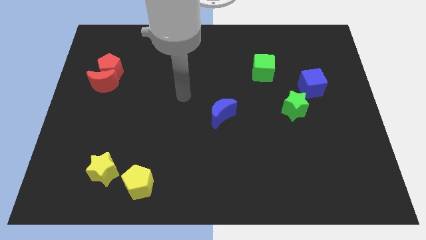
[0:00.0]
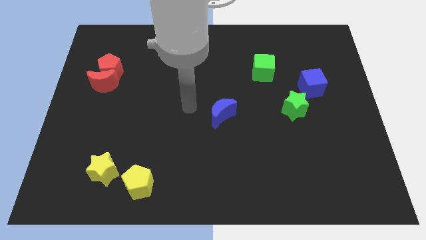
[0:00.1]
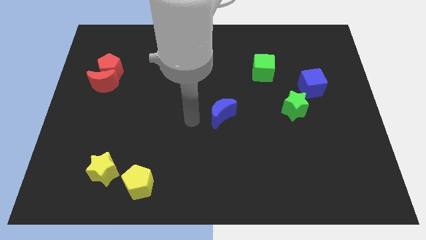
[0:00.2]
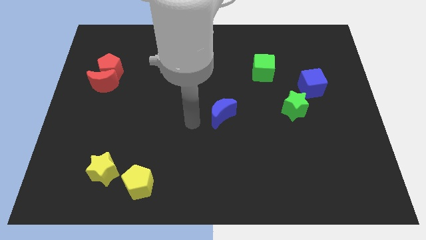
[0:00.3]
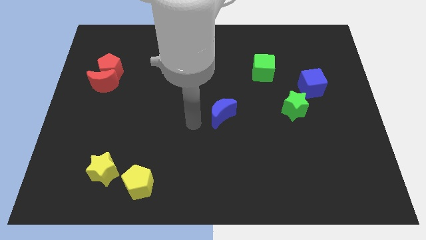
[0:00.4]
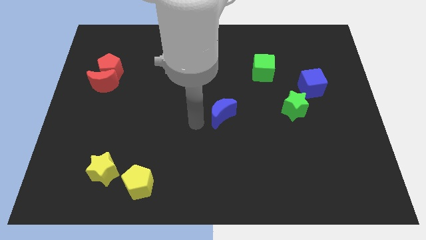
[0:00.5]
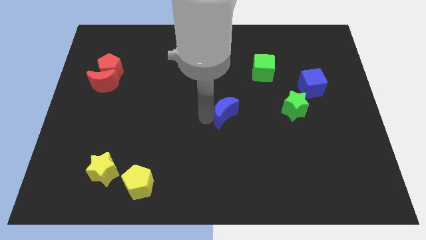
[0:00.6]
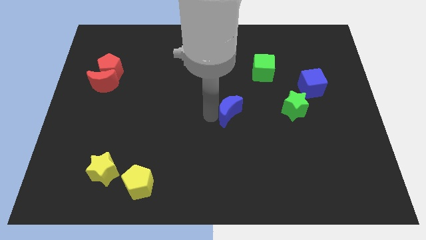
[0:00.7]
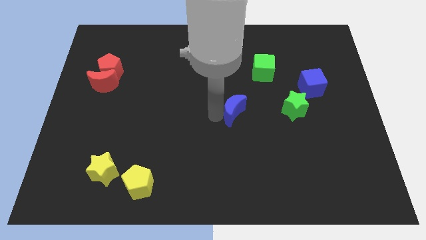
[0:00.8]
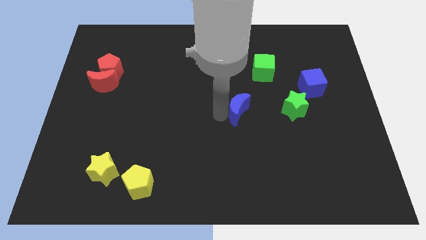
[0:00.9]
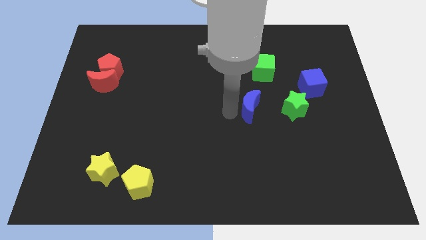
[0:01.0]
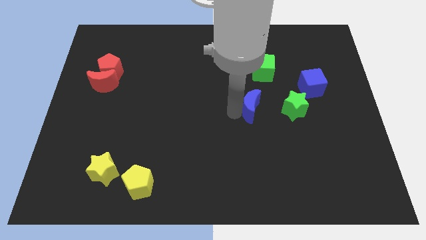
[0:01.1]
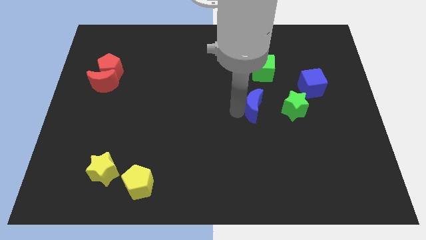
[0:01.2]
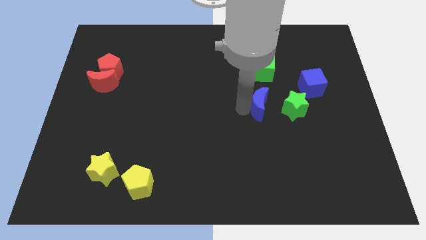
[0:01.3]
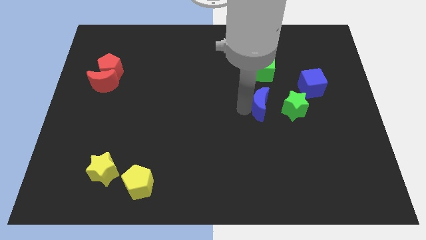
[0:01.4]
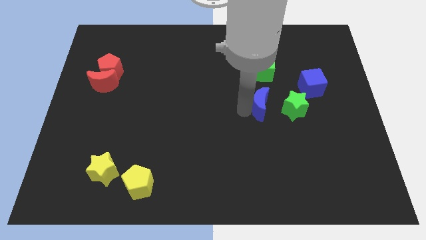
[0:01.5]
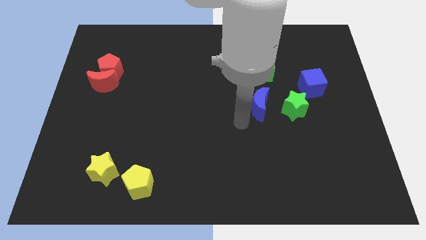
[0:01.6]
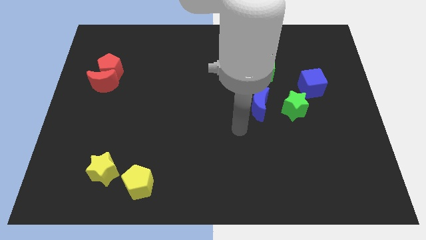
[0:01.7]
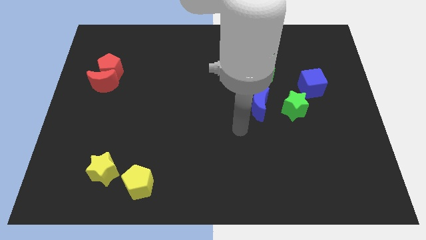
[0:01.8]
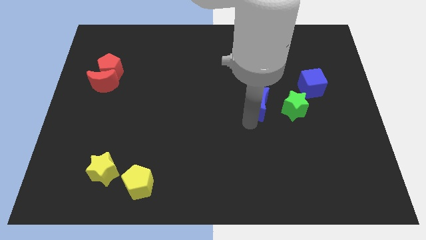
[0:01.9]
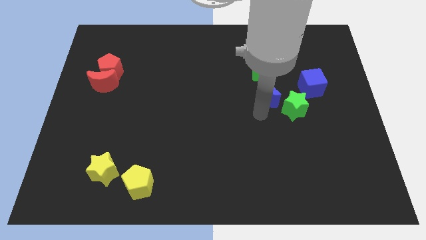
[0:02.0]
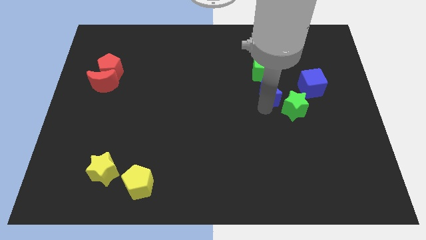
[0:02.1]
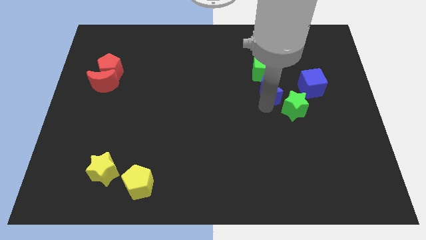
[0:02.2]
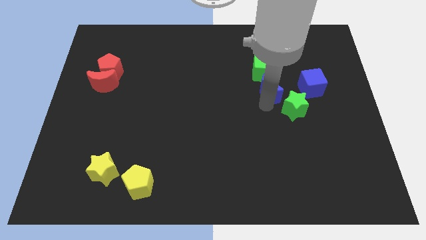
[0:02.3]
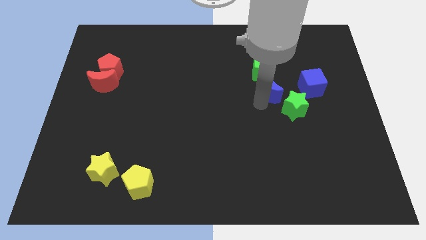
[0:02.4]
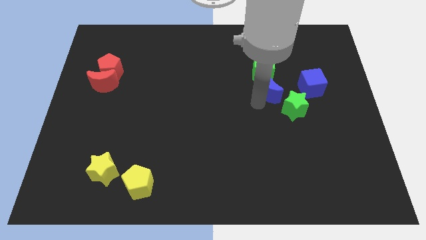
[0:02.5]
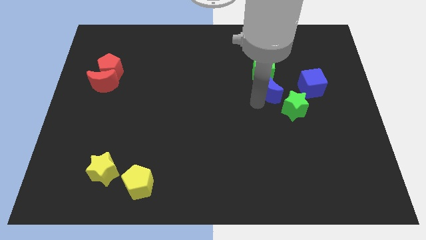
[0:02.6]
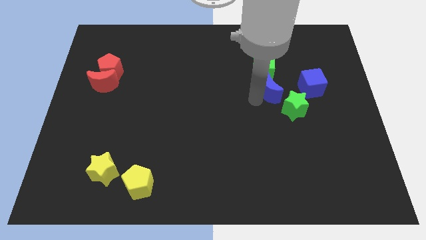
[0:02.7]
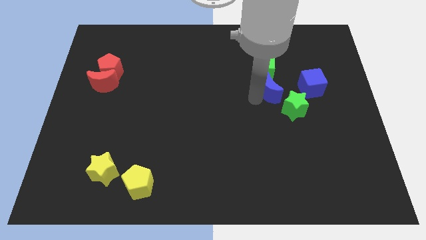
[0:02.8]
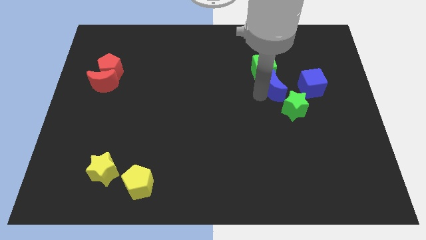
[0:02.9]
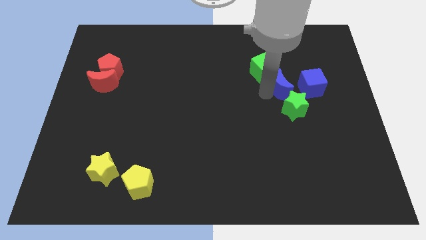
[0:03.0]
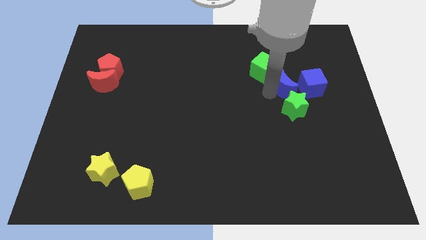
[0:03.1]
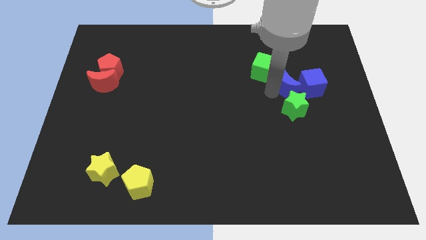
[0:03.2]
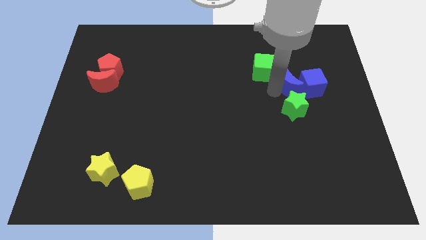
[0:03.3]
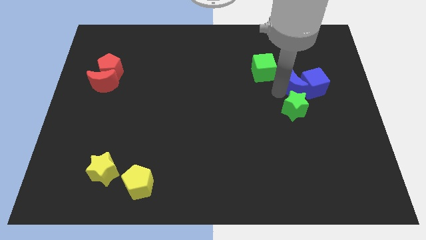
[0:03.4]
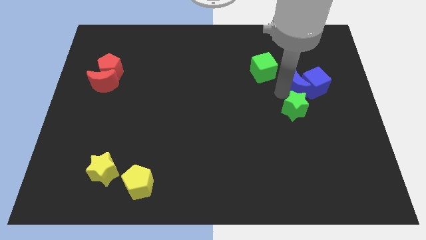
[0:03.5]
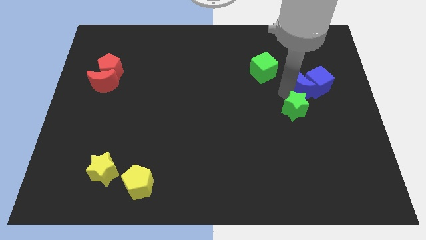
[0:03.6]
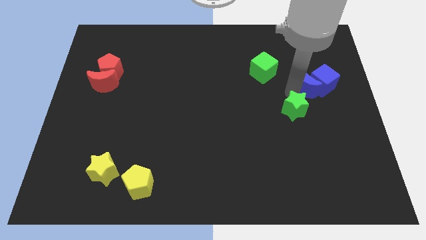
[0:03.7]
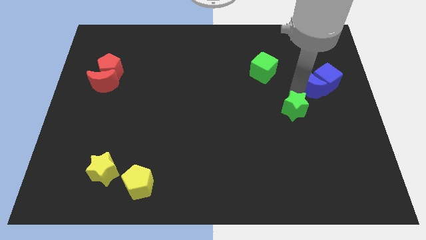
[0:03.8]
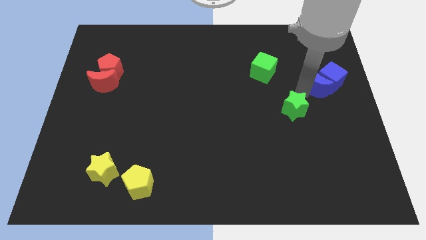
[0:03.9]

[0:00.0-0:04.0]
move the blue cubes to the right of the board

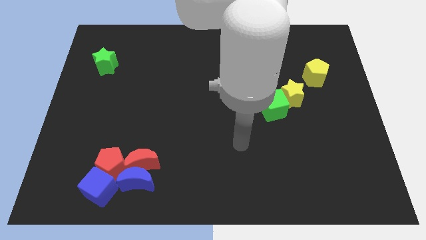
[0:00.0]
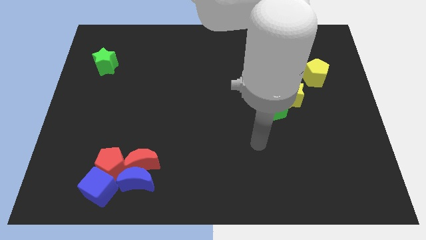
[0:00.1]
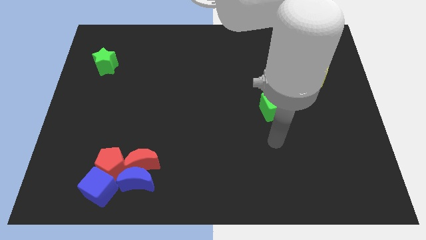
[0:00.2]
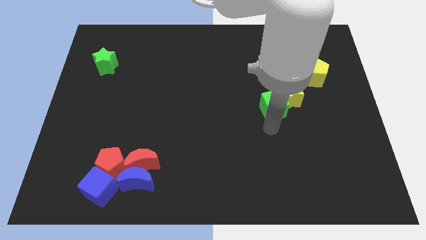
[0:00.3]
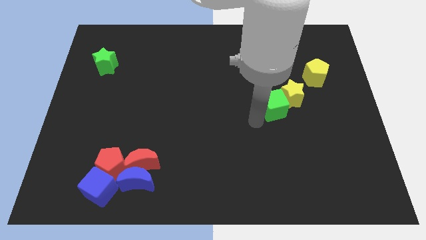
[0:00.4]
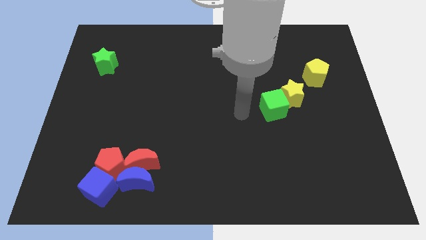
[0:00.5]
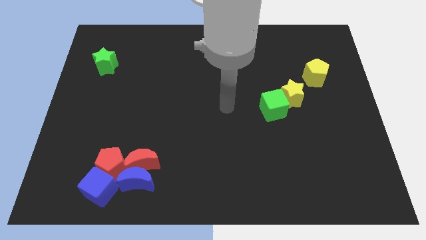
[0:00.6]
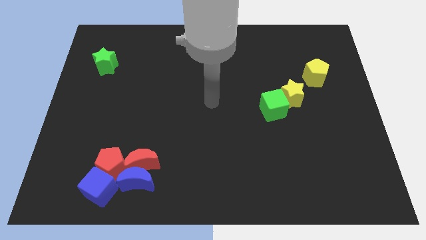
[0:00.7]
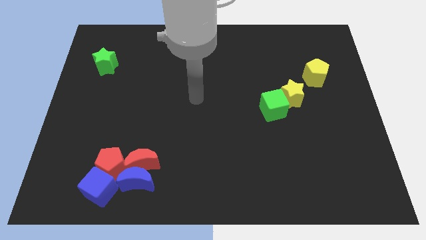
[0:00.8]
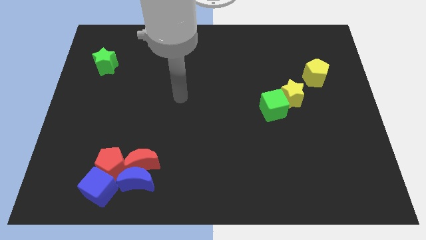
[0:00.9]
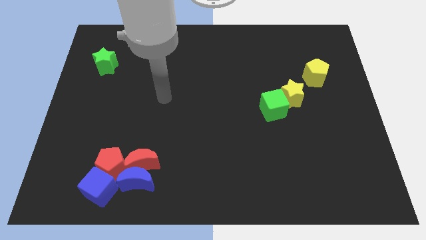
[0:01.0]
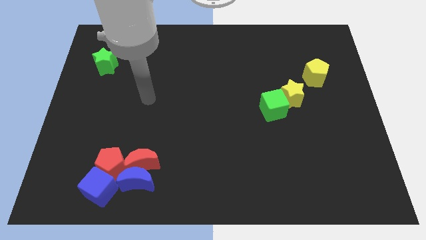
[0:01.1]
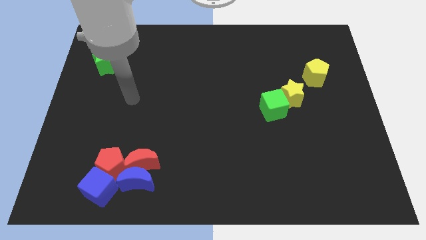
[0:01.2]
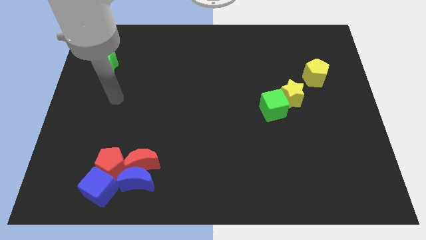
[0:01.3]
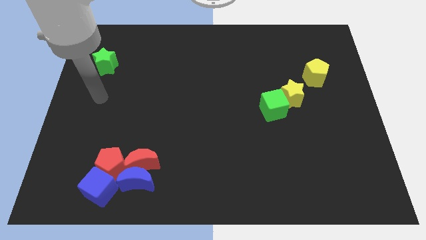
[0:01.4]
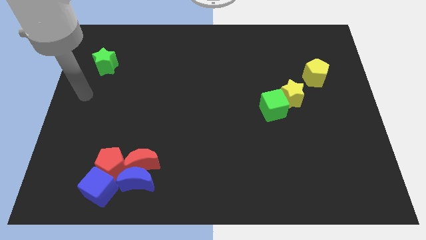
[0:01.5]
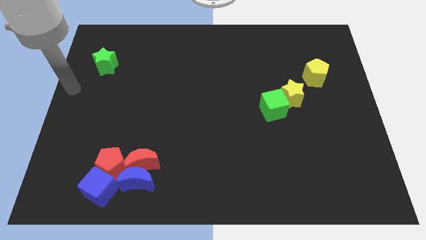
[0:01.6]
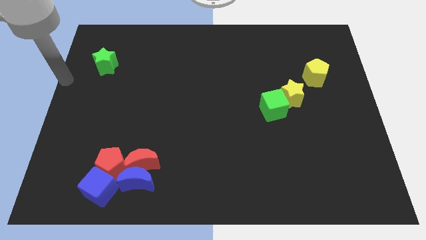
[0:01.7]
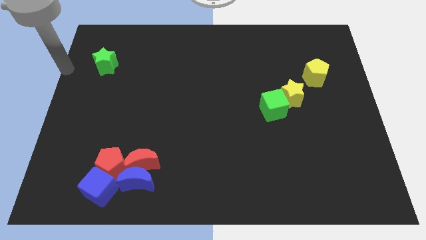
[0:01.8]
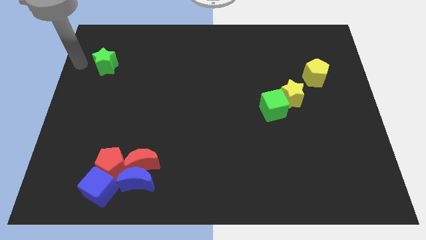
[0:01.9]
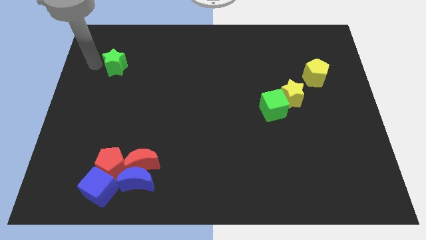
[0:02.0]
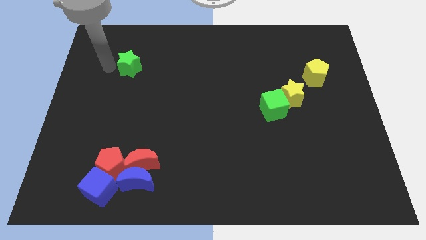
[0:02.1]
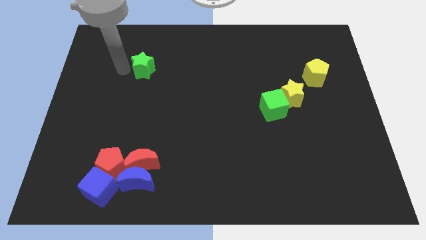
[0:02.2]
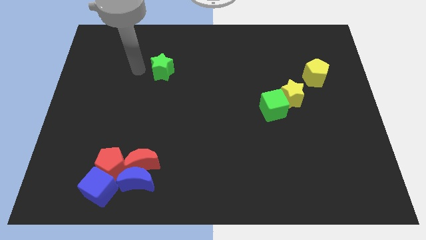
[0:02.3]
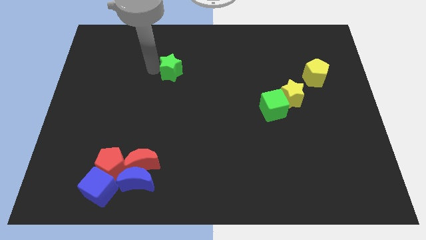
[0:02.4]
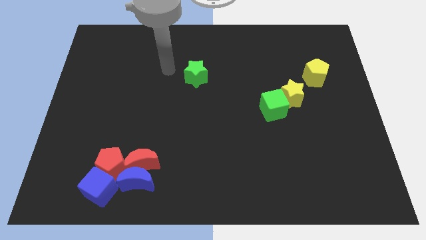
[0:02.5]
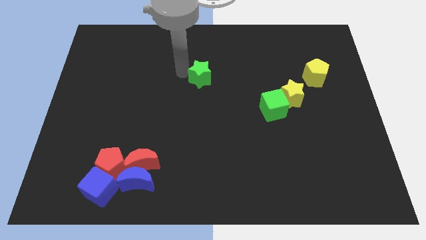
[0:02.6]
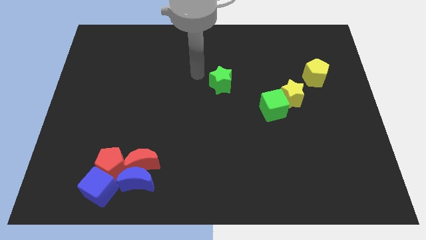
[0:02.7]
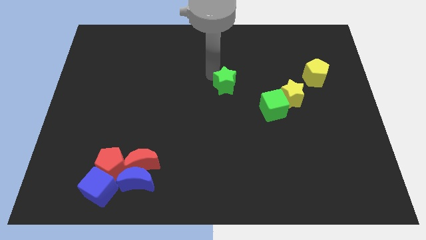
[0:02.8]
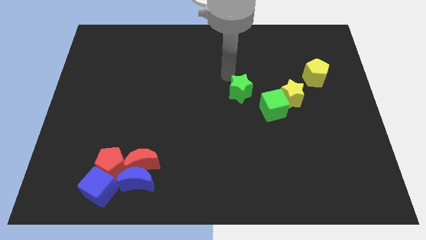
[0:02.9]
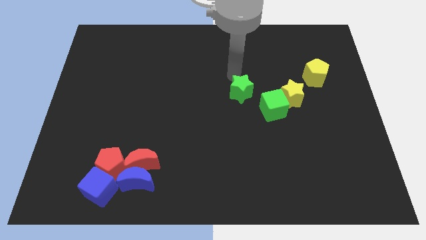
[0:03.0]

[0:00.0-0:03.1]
move green star middle of the board

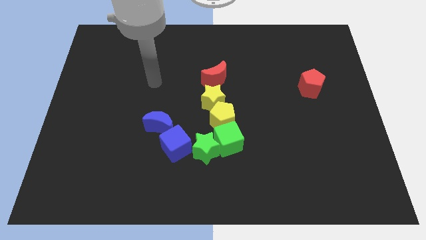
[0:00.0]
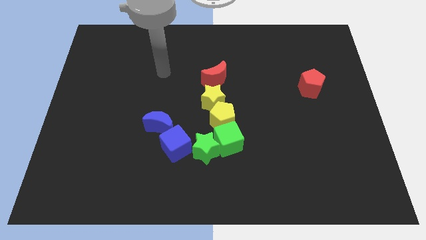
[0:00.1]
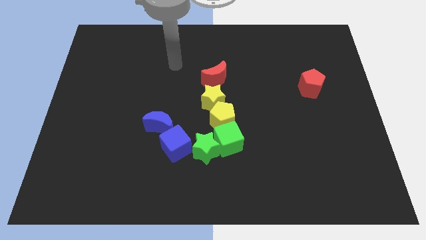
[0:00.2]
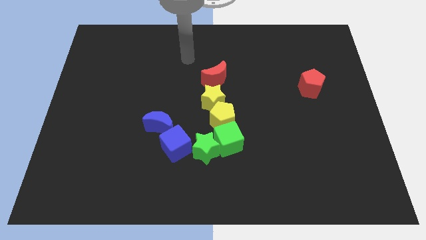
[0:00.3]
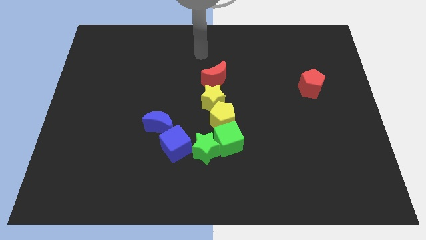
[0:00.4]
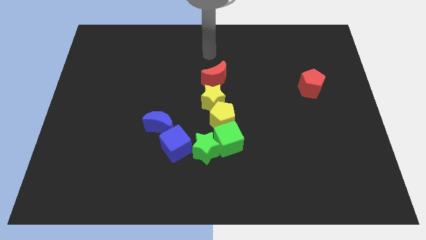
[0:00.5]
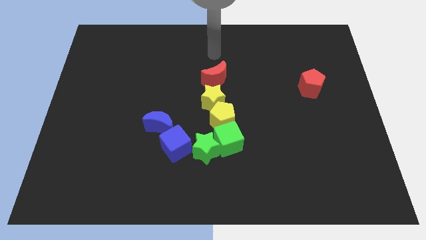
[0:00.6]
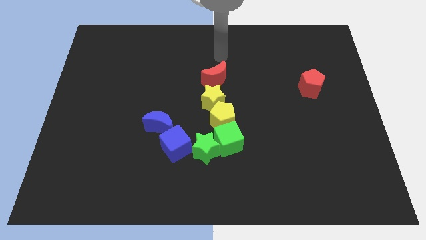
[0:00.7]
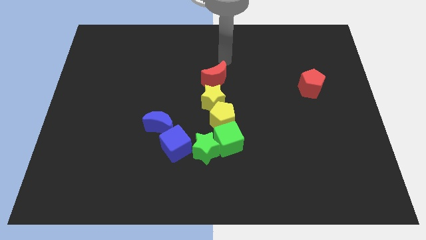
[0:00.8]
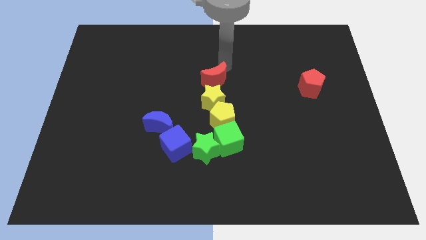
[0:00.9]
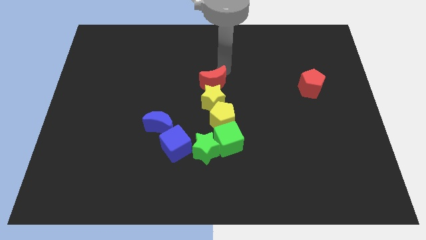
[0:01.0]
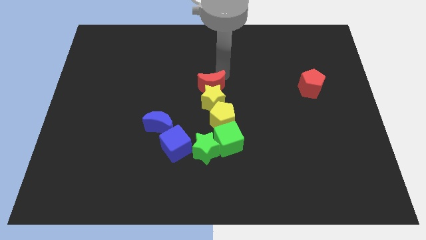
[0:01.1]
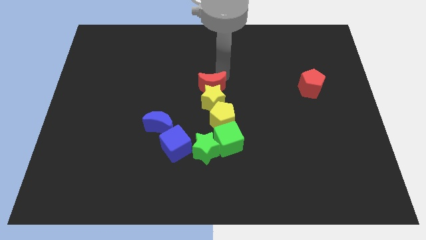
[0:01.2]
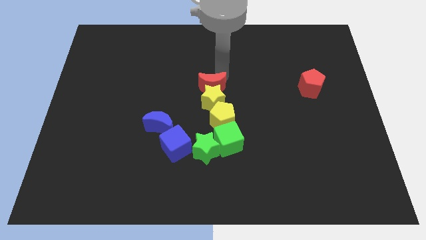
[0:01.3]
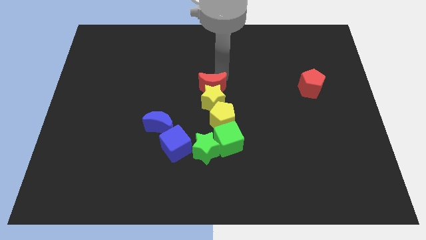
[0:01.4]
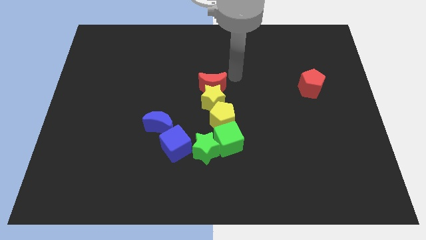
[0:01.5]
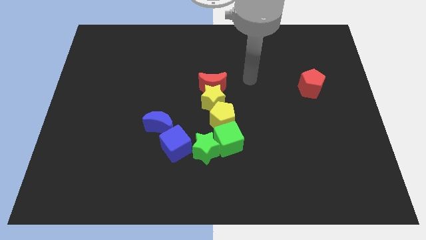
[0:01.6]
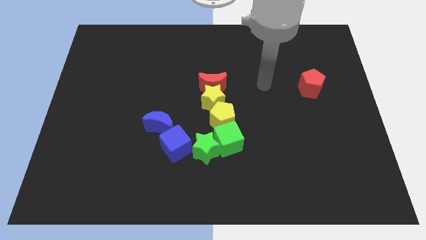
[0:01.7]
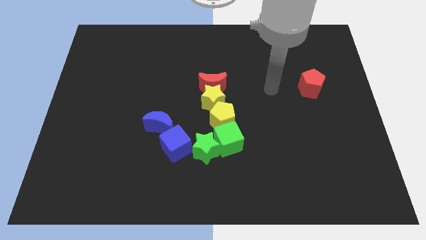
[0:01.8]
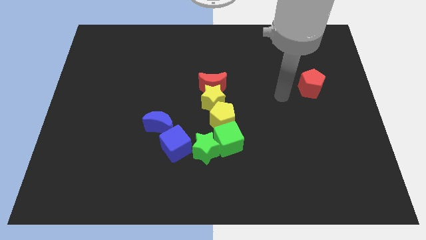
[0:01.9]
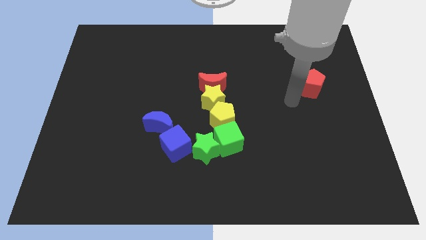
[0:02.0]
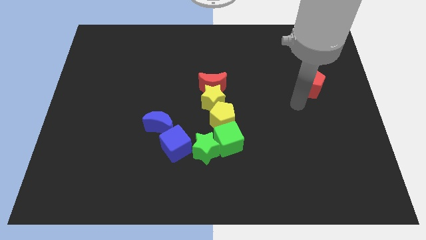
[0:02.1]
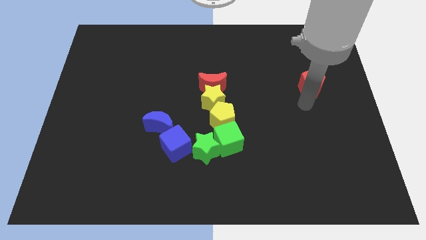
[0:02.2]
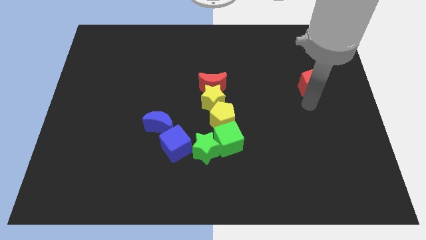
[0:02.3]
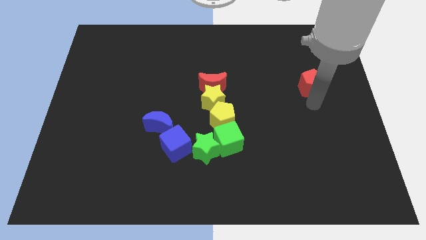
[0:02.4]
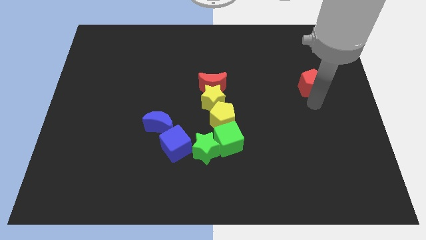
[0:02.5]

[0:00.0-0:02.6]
move the red crescent above the yellow star
